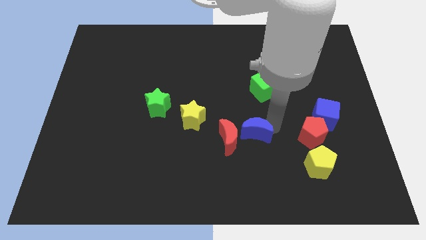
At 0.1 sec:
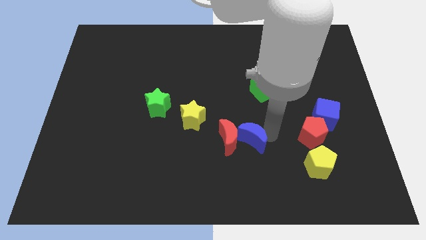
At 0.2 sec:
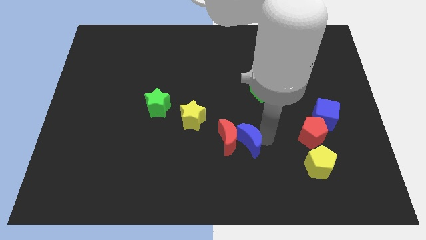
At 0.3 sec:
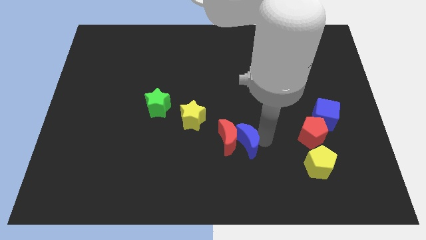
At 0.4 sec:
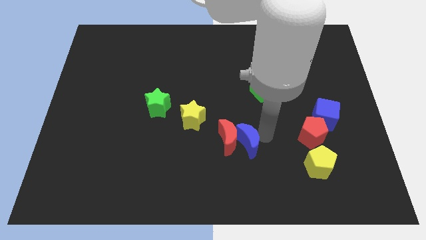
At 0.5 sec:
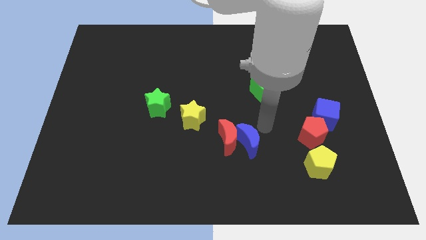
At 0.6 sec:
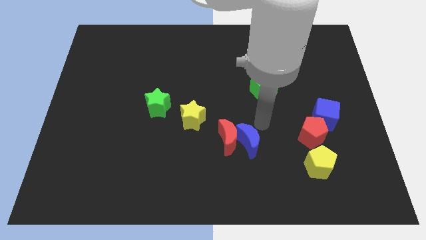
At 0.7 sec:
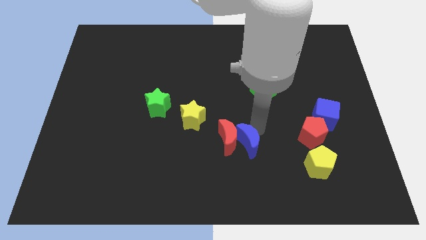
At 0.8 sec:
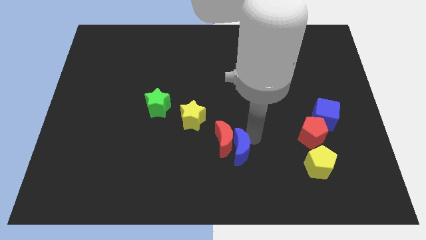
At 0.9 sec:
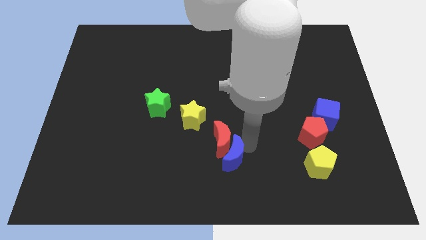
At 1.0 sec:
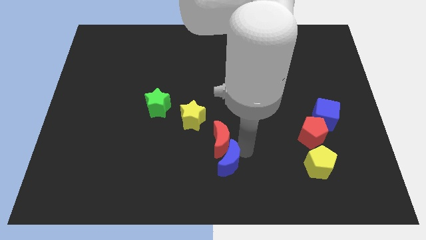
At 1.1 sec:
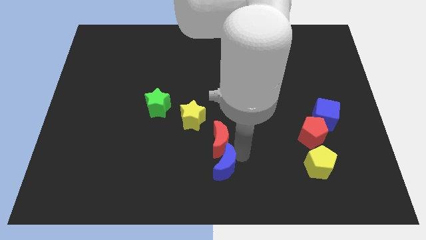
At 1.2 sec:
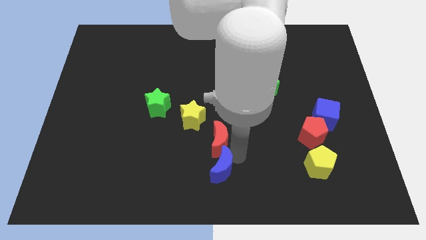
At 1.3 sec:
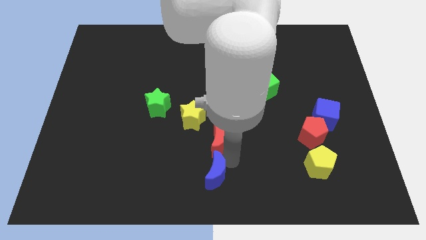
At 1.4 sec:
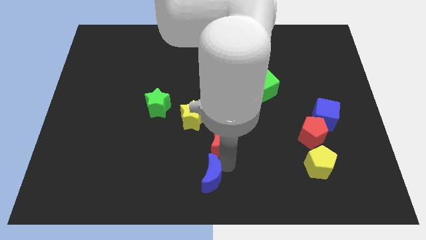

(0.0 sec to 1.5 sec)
place the blue moon below the red moon

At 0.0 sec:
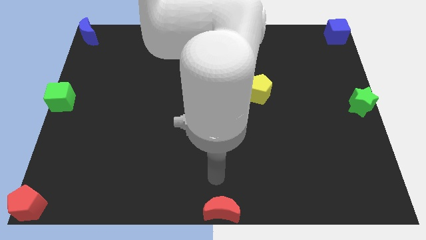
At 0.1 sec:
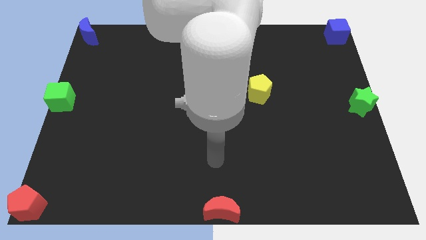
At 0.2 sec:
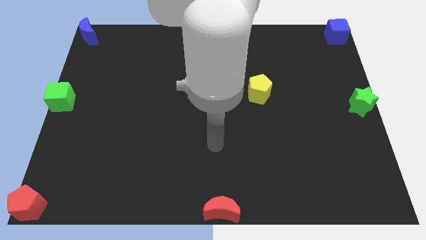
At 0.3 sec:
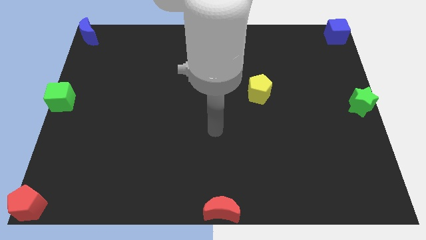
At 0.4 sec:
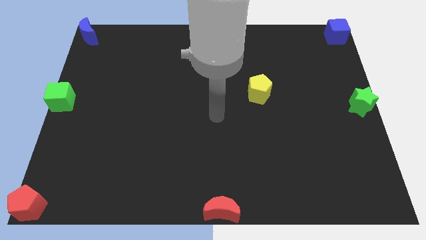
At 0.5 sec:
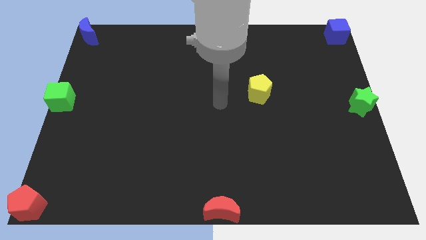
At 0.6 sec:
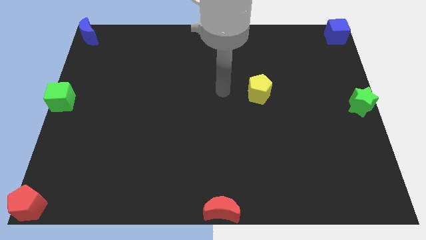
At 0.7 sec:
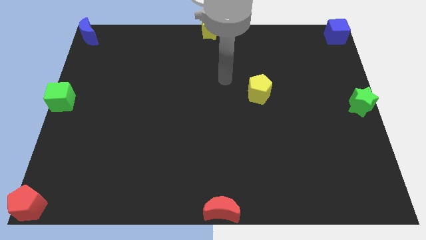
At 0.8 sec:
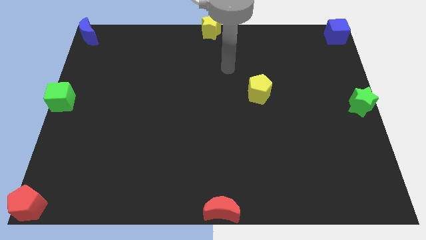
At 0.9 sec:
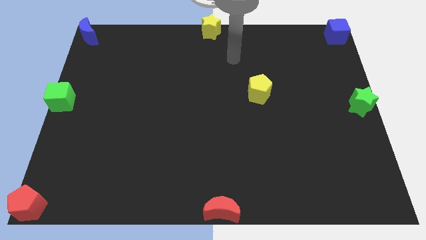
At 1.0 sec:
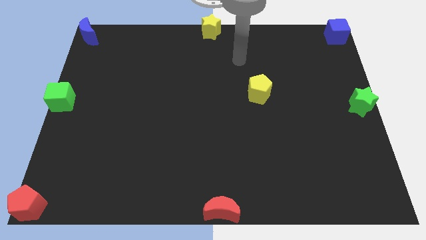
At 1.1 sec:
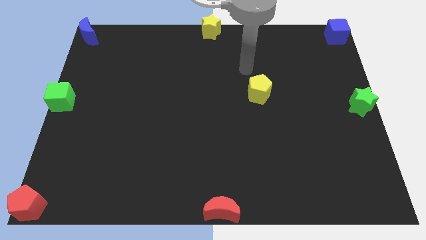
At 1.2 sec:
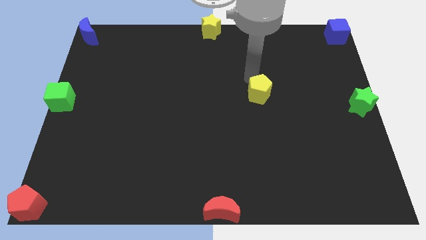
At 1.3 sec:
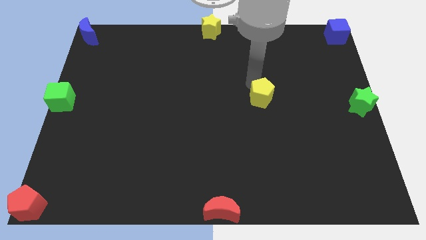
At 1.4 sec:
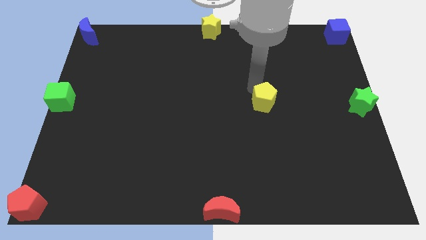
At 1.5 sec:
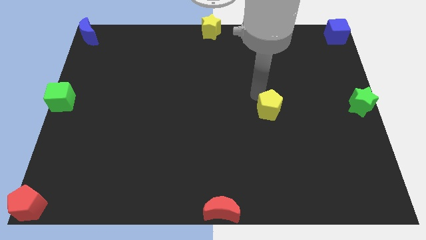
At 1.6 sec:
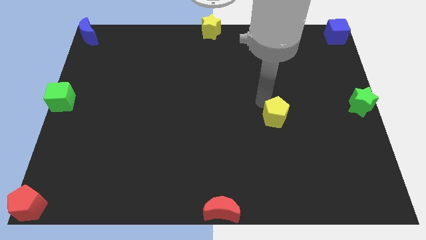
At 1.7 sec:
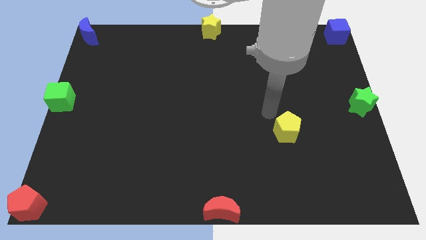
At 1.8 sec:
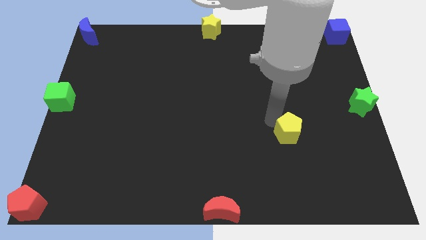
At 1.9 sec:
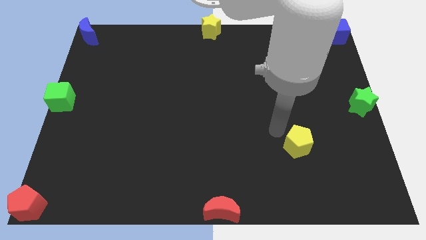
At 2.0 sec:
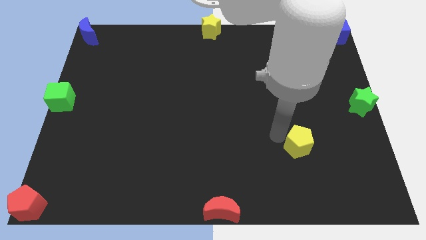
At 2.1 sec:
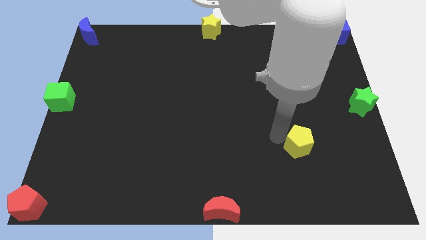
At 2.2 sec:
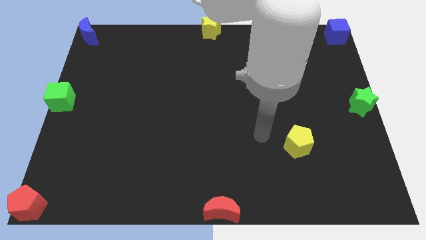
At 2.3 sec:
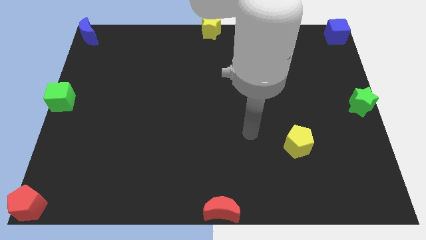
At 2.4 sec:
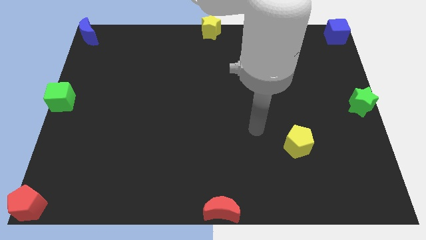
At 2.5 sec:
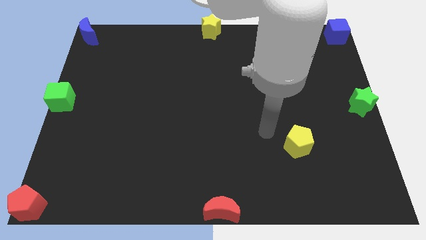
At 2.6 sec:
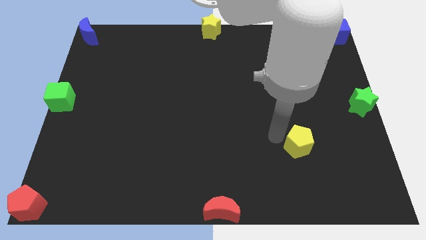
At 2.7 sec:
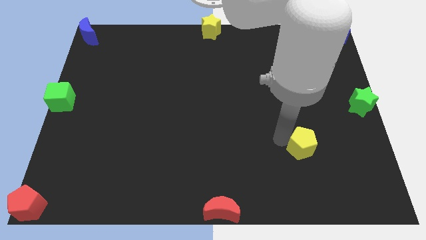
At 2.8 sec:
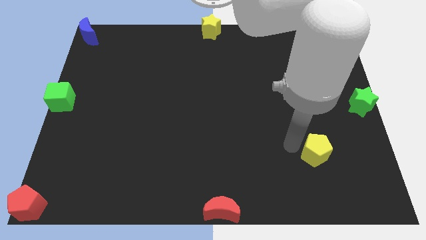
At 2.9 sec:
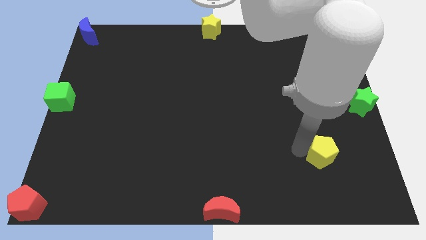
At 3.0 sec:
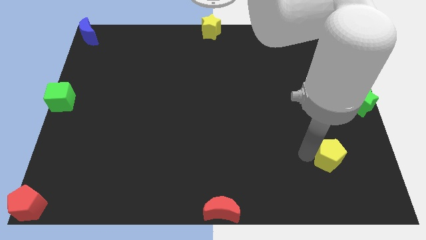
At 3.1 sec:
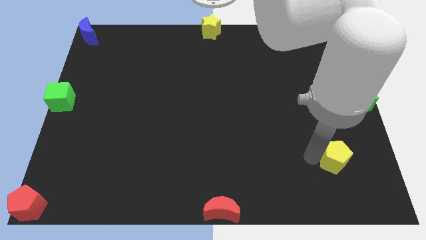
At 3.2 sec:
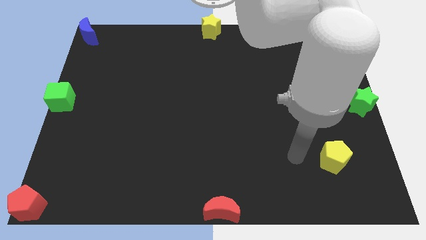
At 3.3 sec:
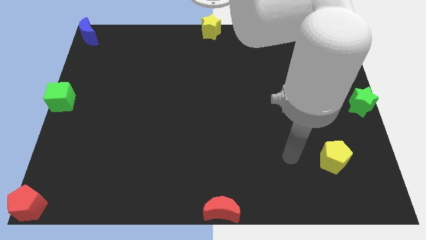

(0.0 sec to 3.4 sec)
place the yellow pentagon diagonally to the green star

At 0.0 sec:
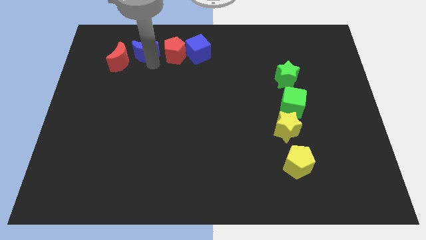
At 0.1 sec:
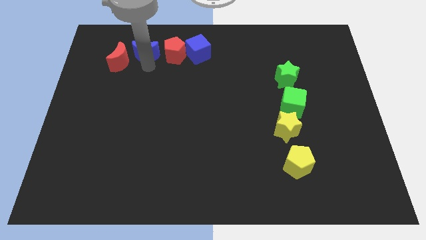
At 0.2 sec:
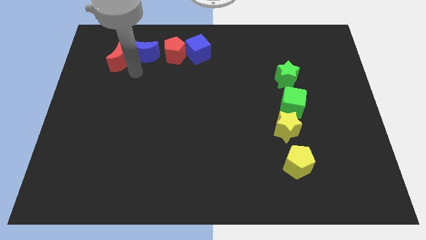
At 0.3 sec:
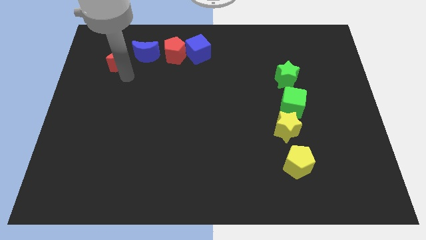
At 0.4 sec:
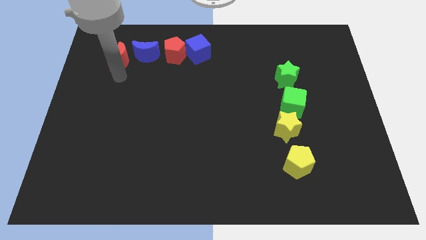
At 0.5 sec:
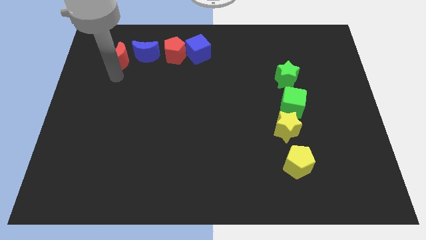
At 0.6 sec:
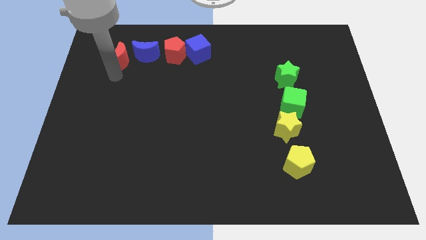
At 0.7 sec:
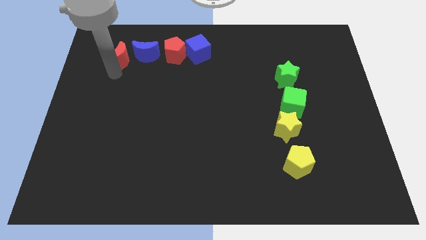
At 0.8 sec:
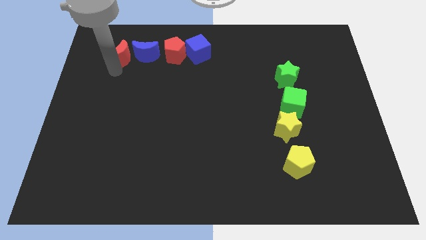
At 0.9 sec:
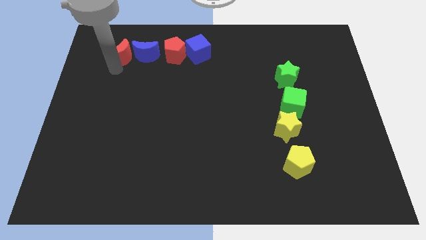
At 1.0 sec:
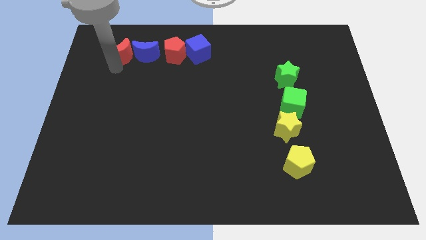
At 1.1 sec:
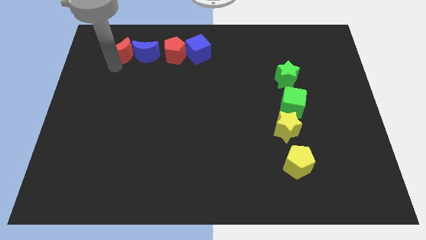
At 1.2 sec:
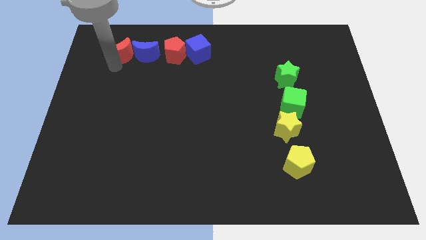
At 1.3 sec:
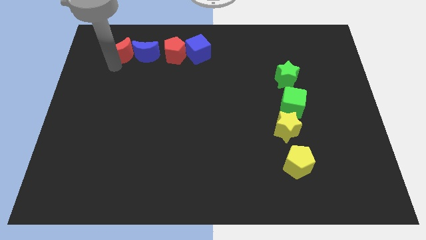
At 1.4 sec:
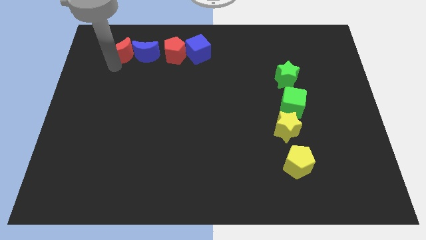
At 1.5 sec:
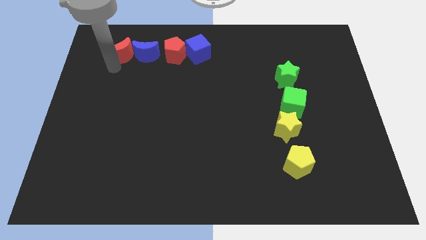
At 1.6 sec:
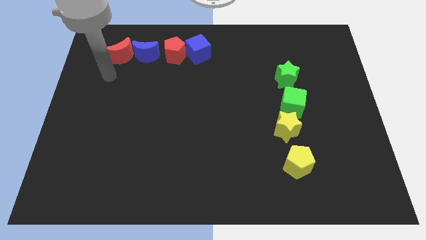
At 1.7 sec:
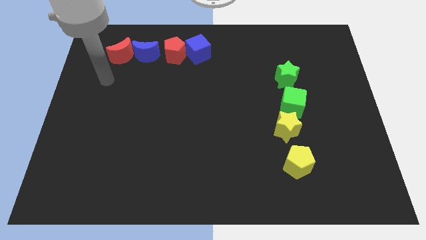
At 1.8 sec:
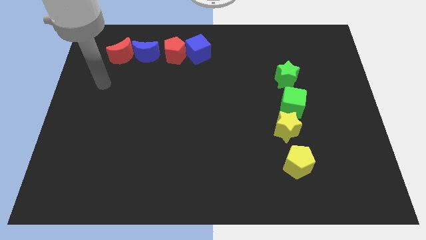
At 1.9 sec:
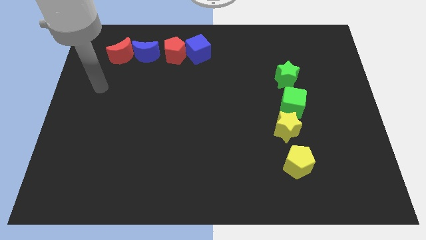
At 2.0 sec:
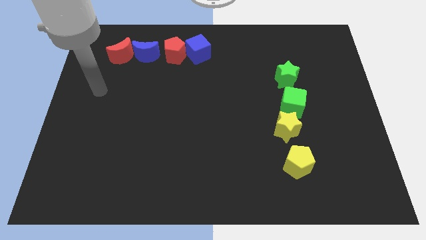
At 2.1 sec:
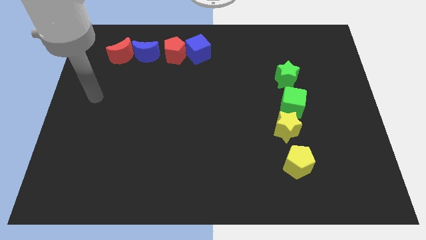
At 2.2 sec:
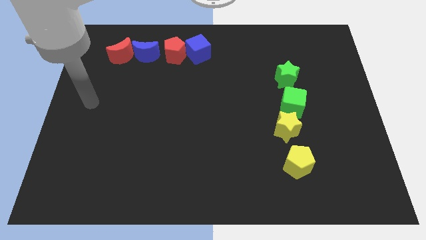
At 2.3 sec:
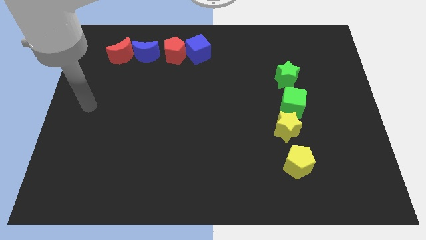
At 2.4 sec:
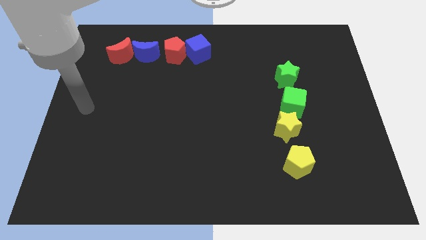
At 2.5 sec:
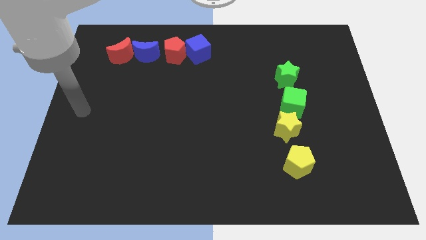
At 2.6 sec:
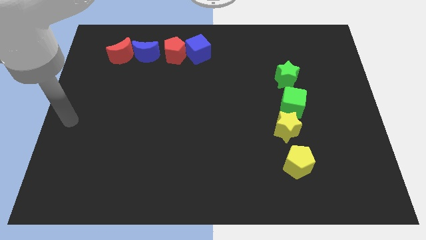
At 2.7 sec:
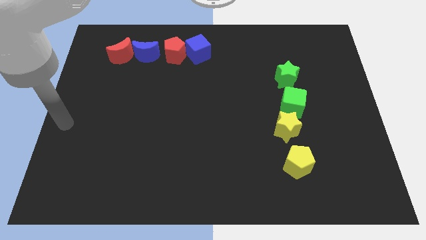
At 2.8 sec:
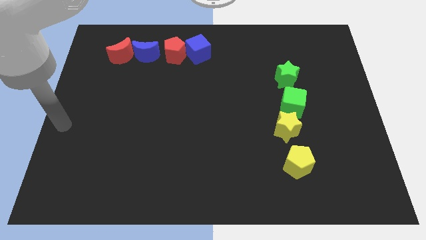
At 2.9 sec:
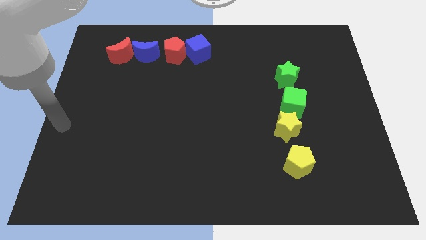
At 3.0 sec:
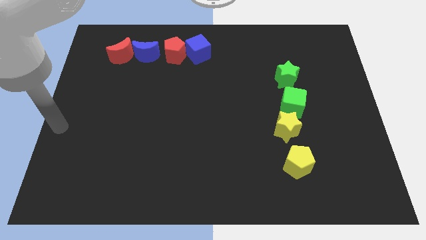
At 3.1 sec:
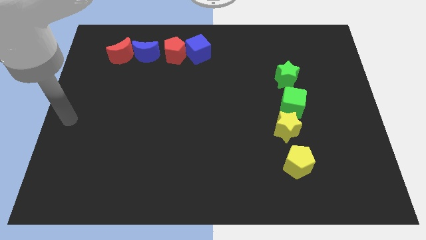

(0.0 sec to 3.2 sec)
slightly push the red moon to the left side of blue moon

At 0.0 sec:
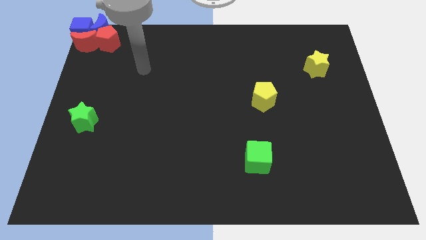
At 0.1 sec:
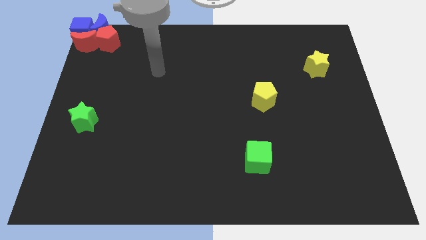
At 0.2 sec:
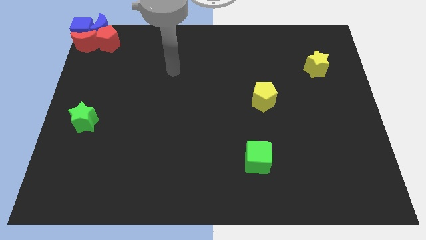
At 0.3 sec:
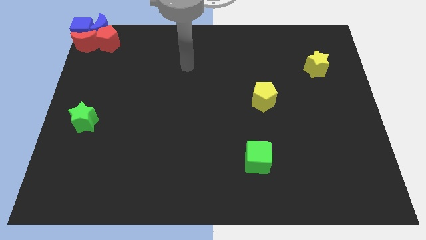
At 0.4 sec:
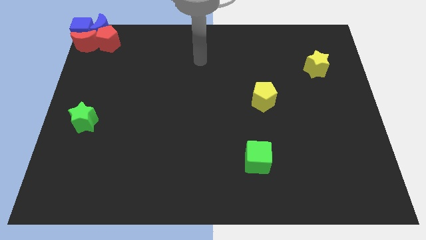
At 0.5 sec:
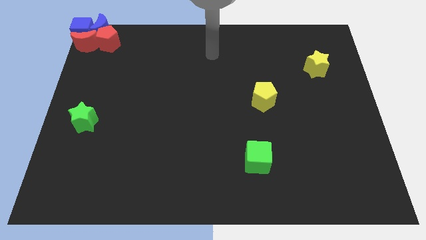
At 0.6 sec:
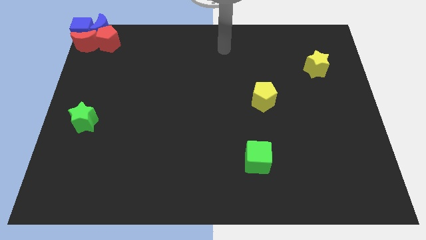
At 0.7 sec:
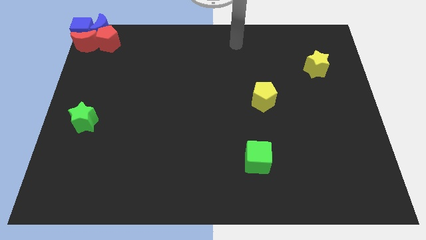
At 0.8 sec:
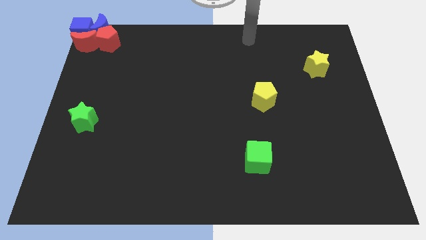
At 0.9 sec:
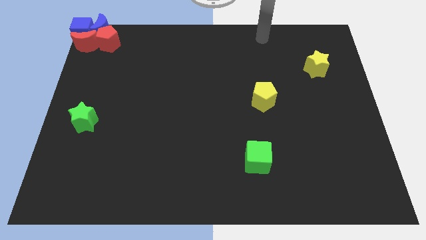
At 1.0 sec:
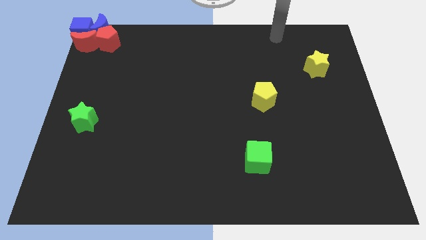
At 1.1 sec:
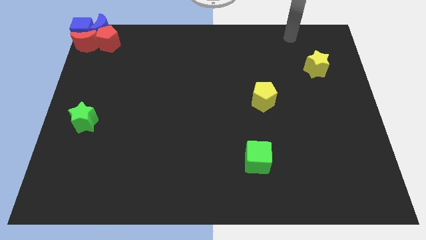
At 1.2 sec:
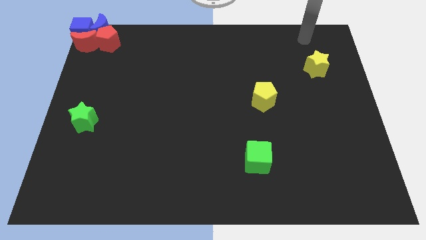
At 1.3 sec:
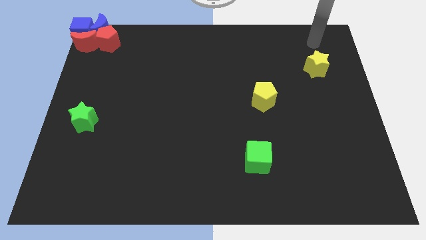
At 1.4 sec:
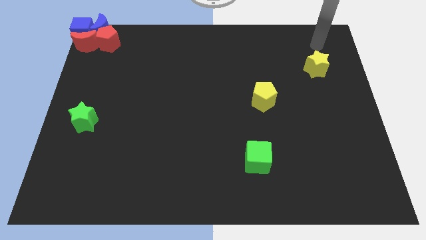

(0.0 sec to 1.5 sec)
point your arm at the top of the yellow star
